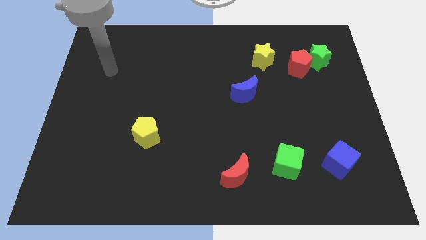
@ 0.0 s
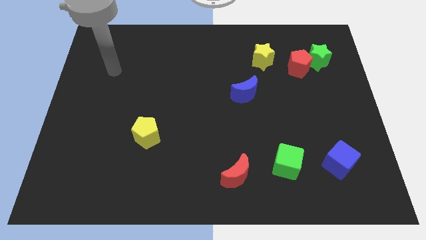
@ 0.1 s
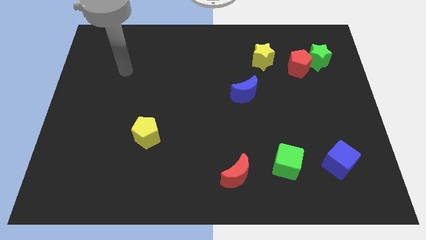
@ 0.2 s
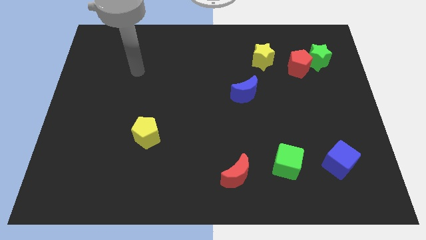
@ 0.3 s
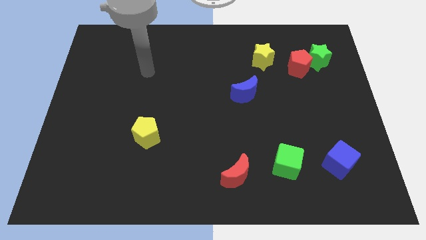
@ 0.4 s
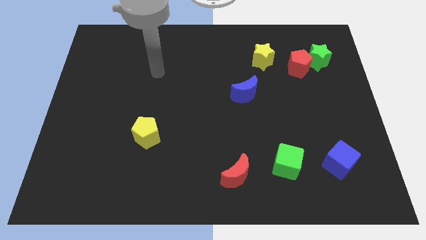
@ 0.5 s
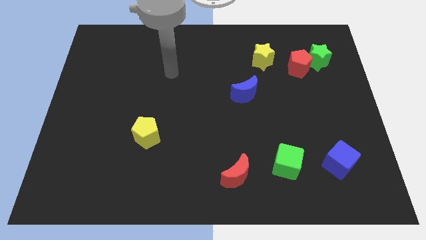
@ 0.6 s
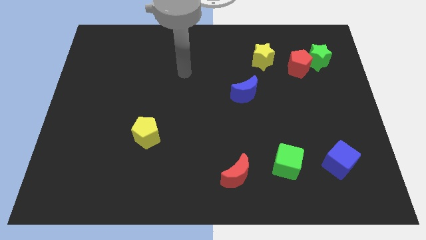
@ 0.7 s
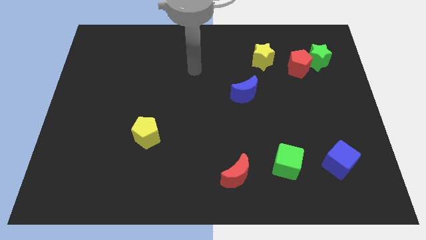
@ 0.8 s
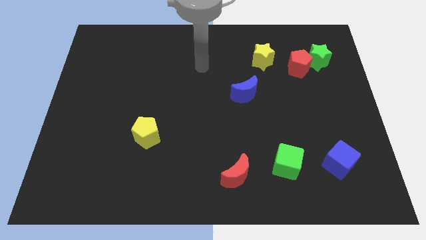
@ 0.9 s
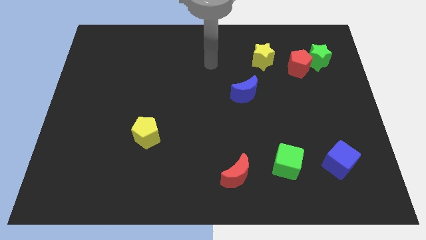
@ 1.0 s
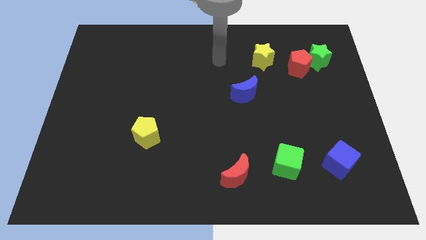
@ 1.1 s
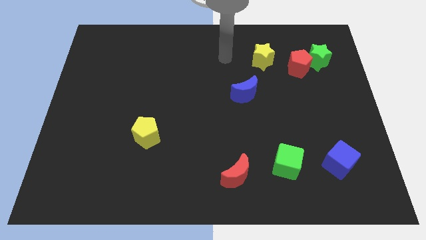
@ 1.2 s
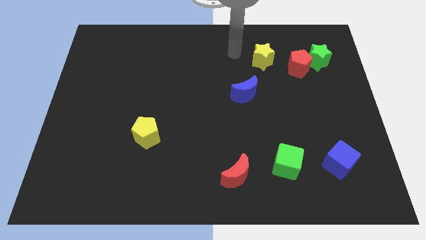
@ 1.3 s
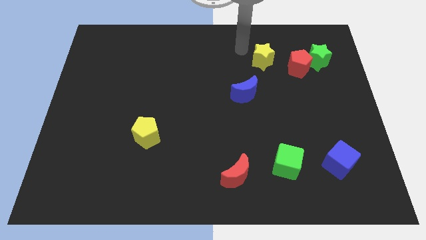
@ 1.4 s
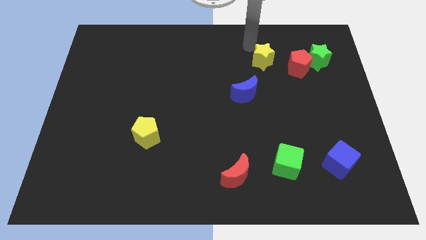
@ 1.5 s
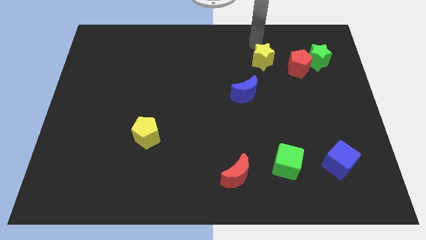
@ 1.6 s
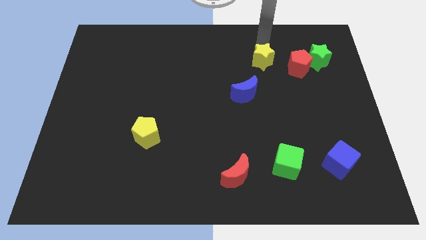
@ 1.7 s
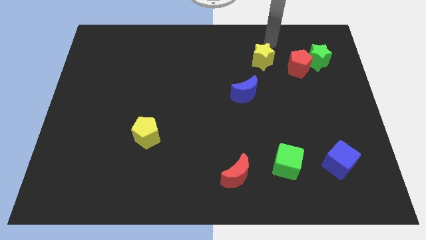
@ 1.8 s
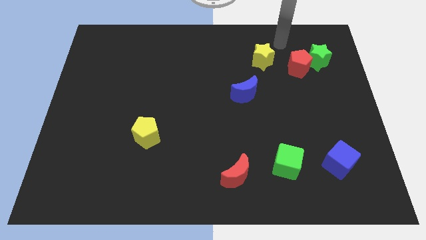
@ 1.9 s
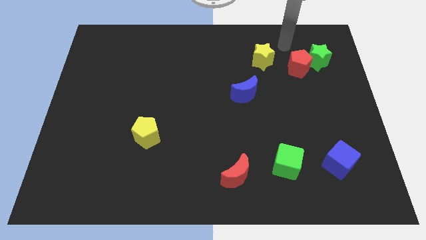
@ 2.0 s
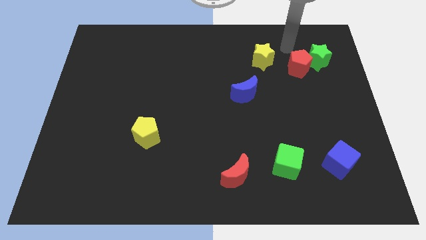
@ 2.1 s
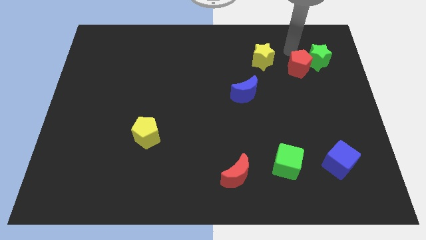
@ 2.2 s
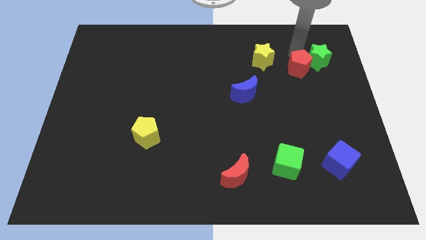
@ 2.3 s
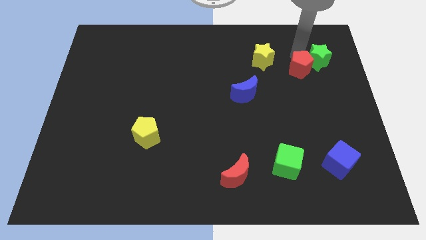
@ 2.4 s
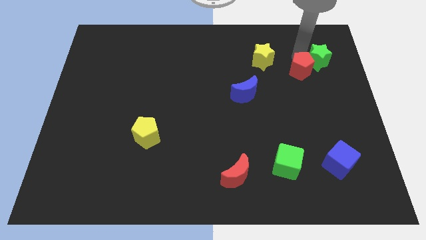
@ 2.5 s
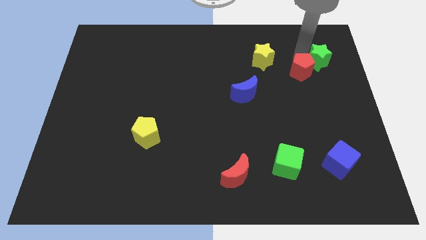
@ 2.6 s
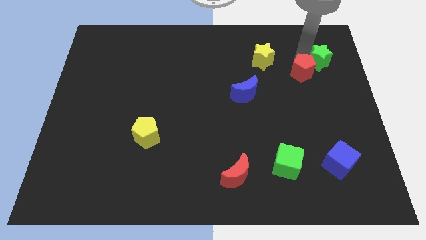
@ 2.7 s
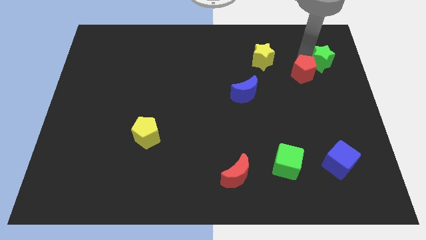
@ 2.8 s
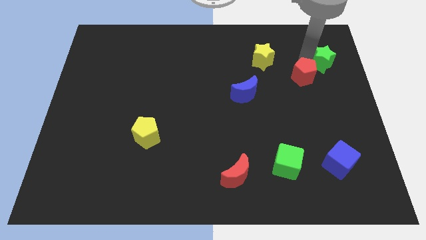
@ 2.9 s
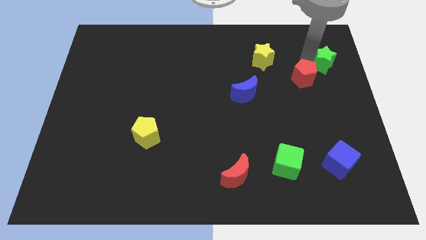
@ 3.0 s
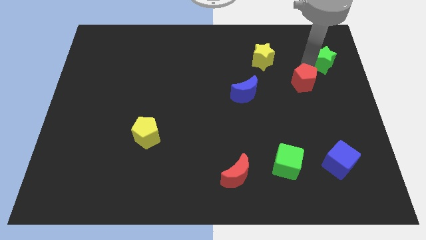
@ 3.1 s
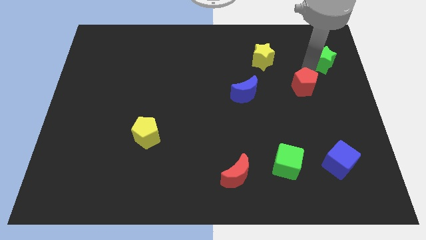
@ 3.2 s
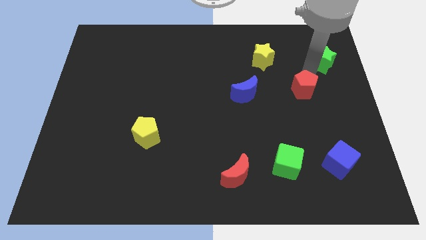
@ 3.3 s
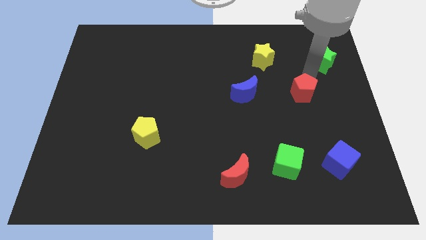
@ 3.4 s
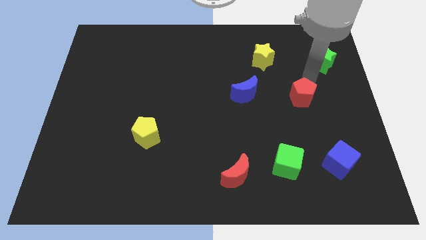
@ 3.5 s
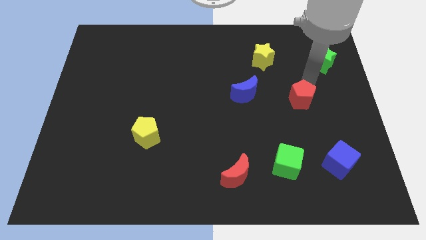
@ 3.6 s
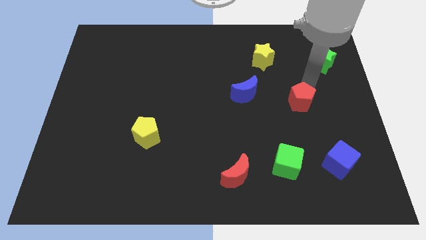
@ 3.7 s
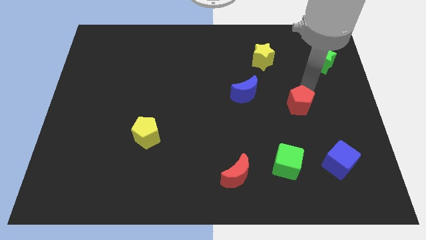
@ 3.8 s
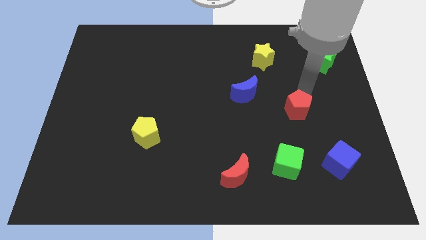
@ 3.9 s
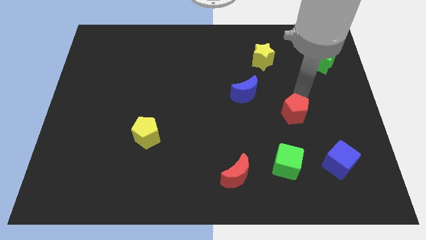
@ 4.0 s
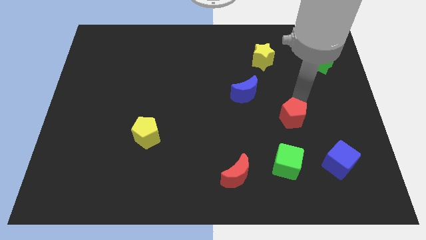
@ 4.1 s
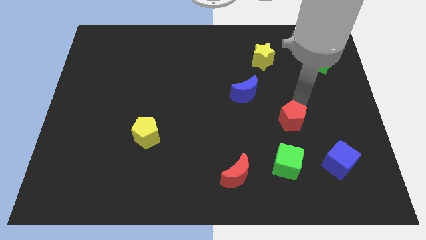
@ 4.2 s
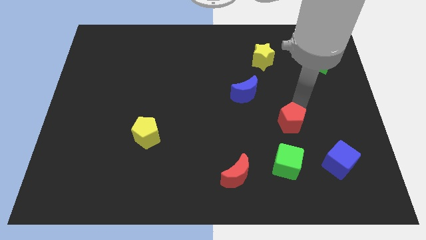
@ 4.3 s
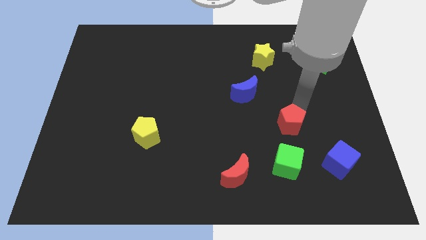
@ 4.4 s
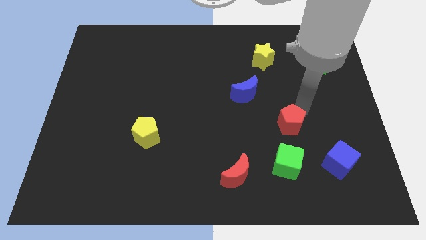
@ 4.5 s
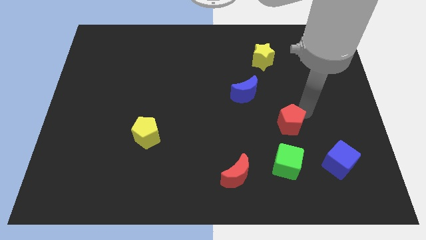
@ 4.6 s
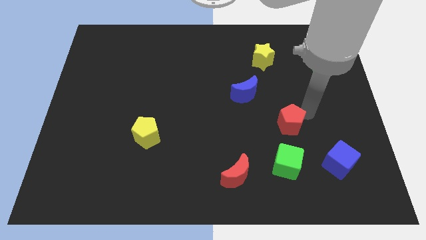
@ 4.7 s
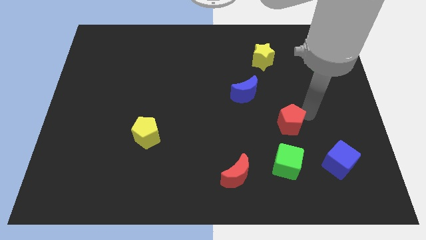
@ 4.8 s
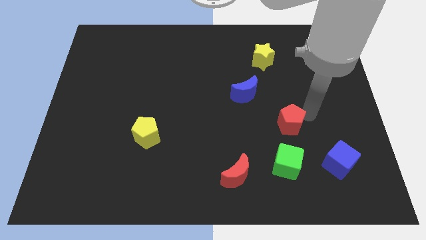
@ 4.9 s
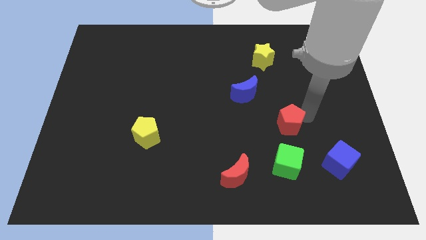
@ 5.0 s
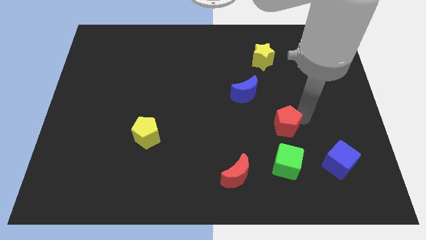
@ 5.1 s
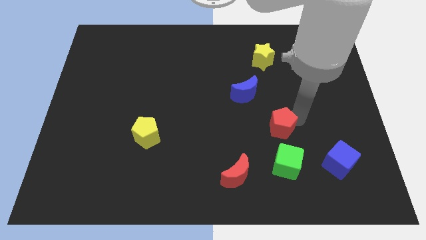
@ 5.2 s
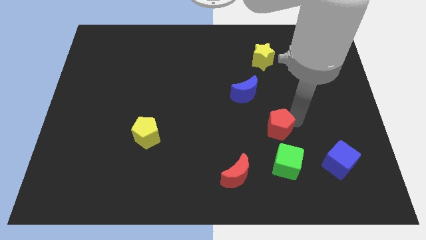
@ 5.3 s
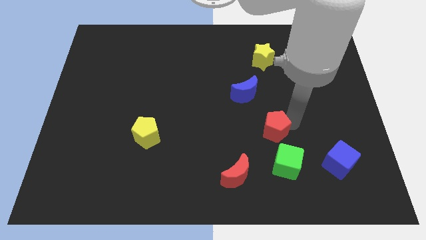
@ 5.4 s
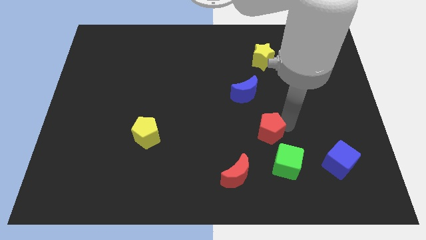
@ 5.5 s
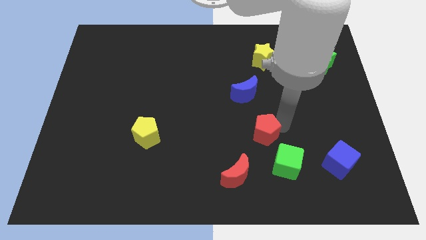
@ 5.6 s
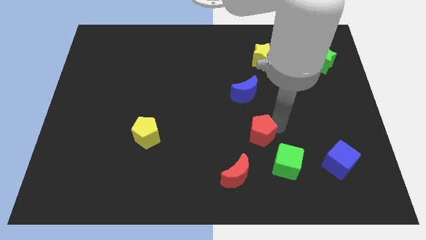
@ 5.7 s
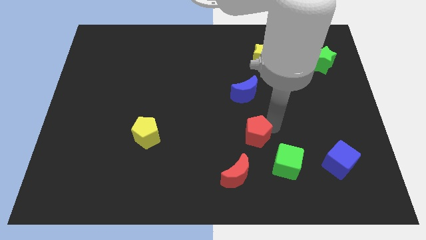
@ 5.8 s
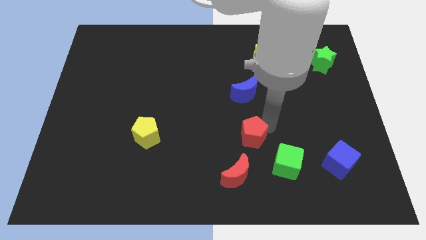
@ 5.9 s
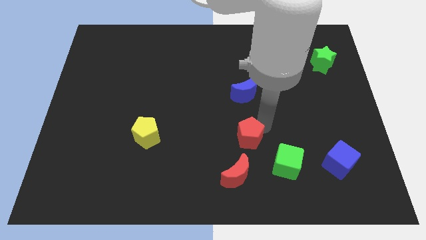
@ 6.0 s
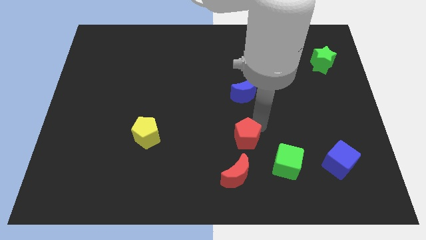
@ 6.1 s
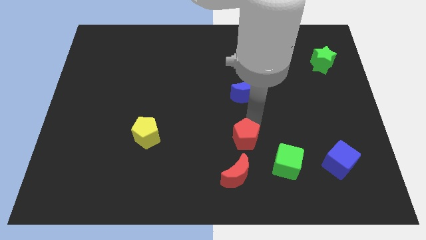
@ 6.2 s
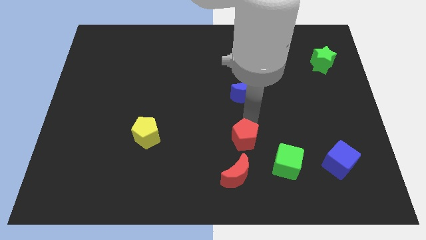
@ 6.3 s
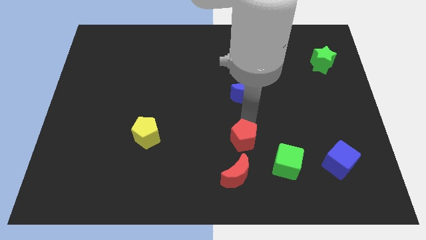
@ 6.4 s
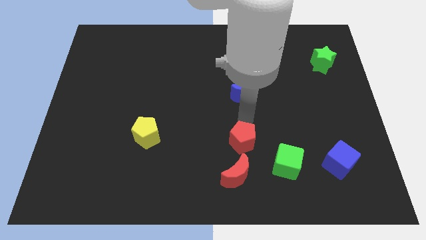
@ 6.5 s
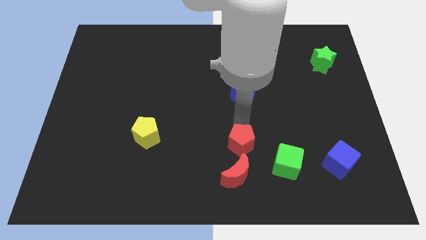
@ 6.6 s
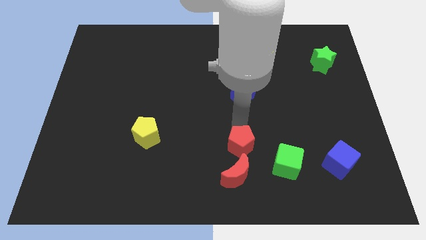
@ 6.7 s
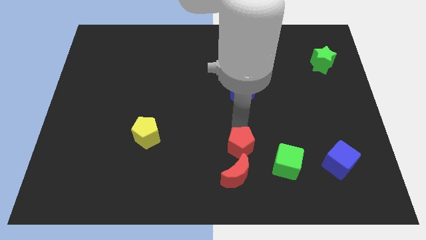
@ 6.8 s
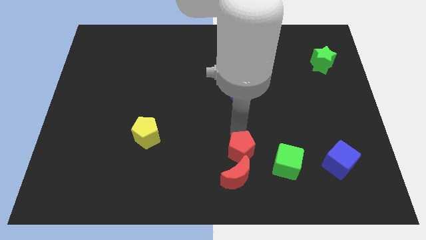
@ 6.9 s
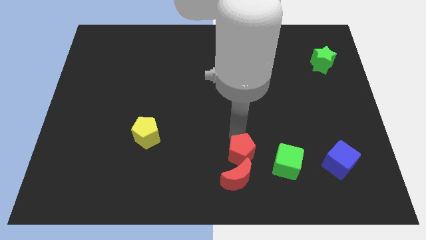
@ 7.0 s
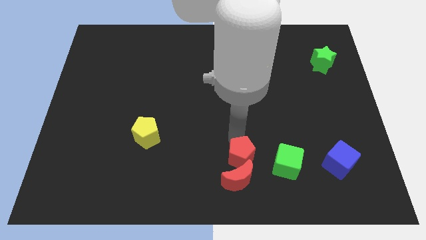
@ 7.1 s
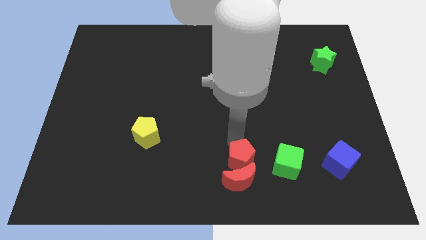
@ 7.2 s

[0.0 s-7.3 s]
move the red pentagon towards the red moon

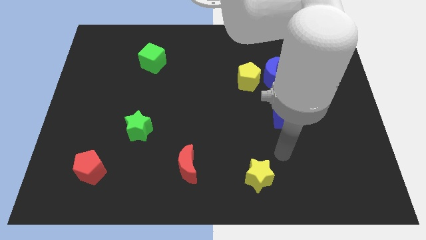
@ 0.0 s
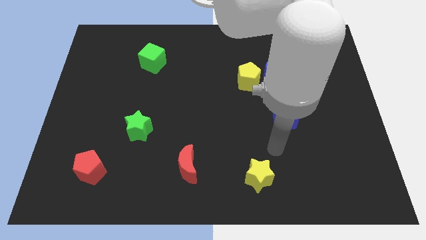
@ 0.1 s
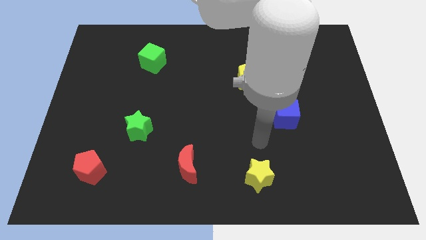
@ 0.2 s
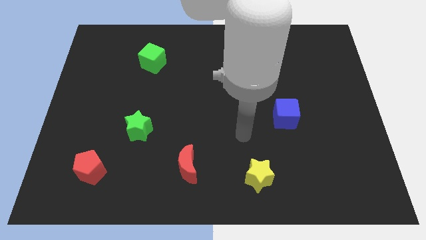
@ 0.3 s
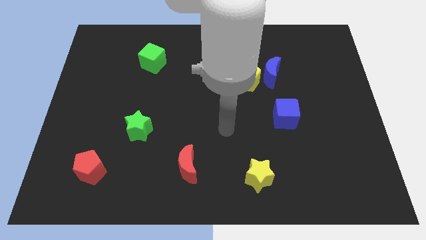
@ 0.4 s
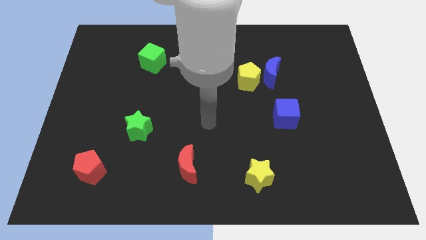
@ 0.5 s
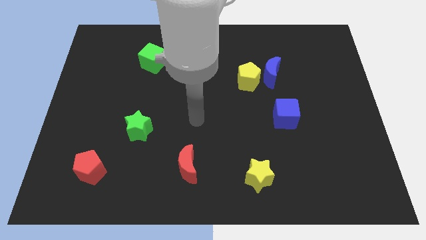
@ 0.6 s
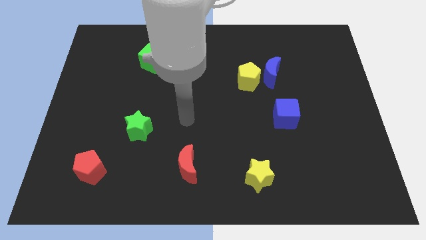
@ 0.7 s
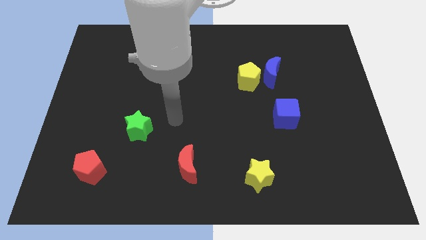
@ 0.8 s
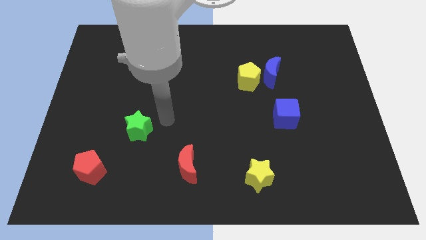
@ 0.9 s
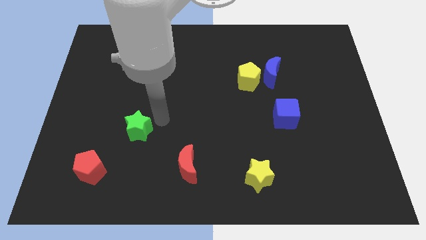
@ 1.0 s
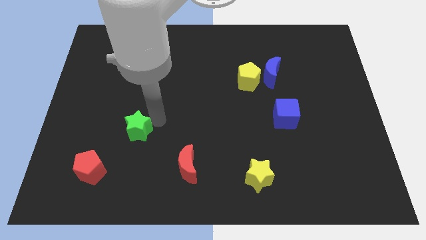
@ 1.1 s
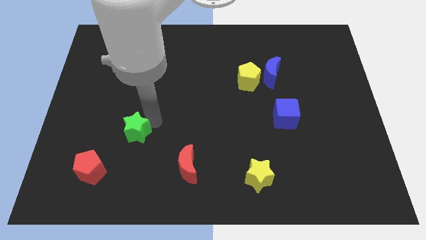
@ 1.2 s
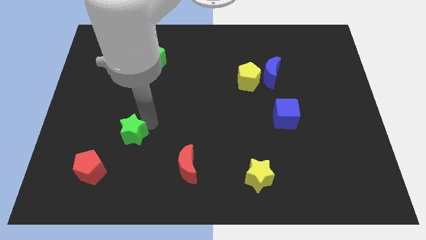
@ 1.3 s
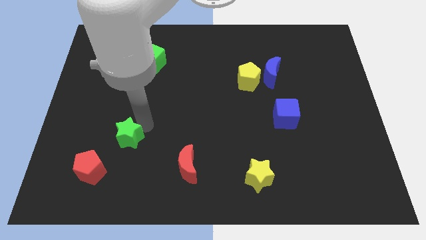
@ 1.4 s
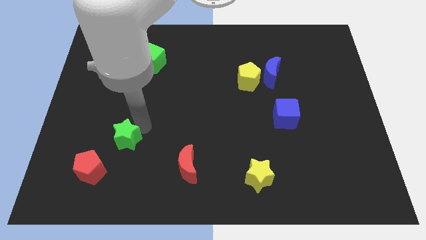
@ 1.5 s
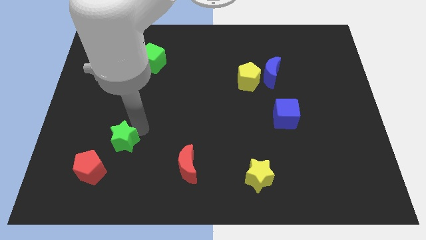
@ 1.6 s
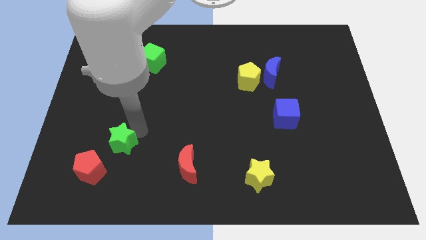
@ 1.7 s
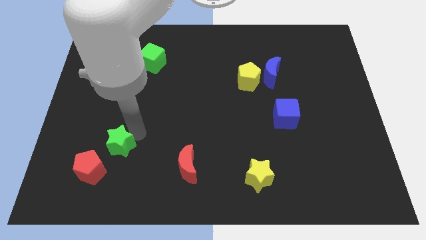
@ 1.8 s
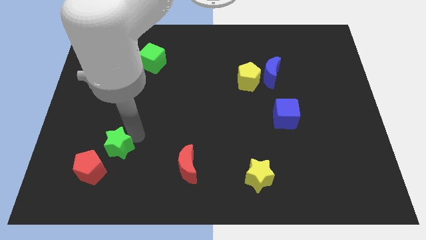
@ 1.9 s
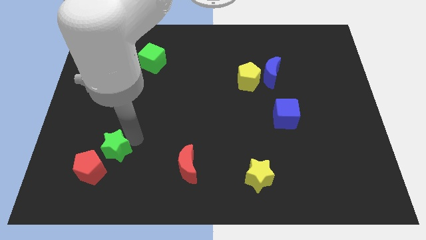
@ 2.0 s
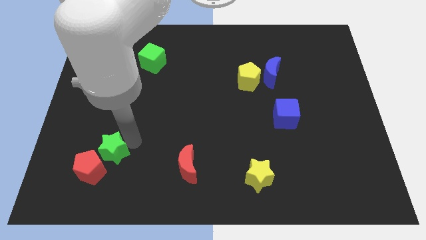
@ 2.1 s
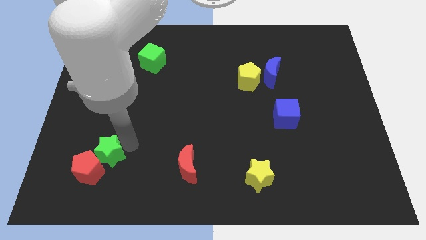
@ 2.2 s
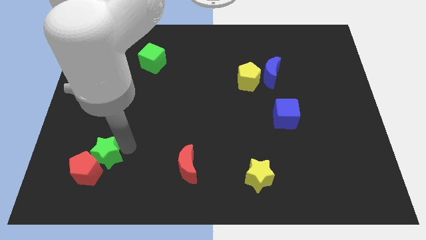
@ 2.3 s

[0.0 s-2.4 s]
push the green star to the red pentagon
